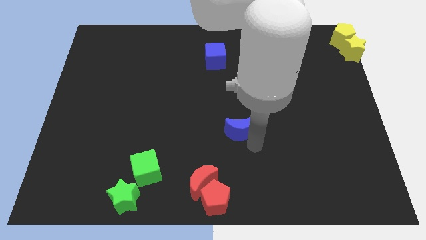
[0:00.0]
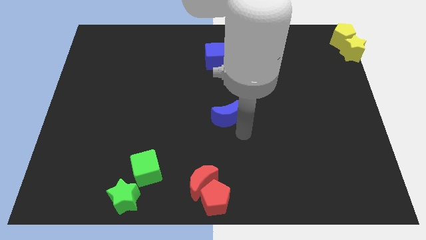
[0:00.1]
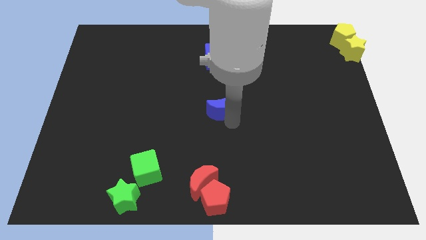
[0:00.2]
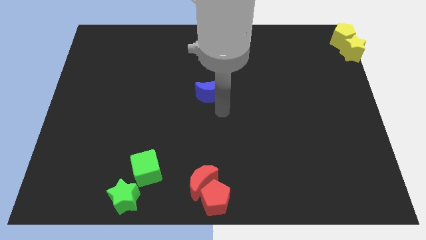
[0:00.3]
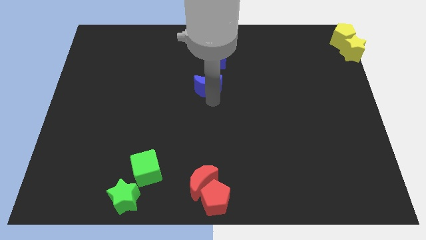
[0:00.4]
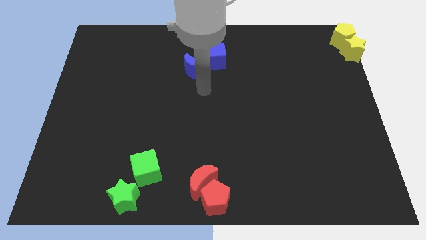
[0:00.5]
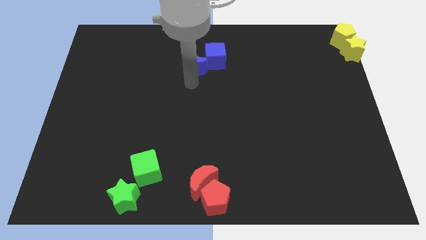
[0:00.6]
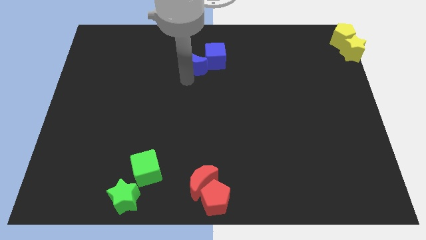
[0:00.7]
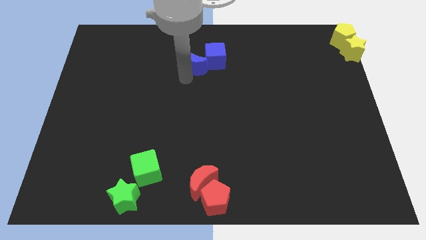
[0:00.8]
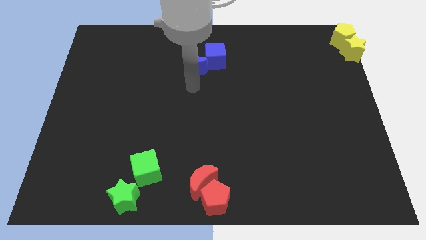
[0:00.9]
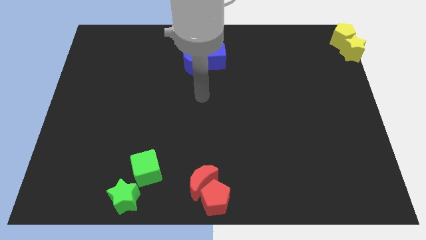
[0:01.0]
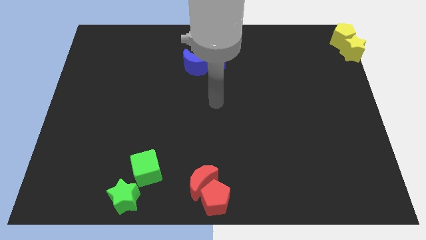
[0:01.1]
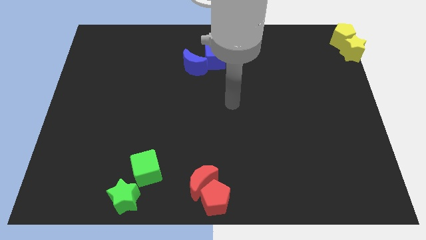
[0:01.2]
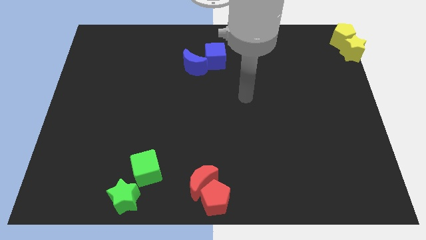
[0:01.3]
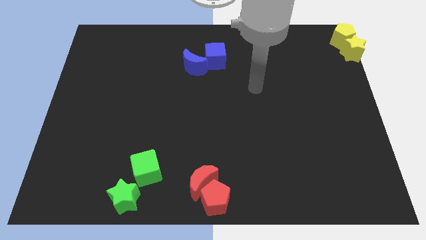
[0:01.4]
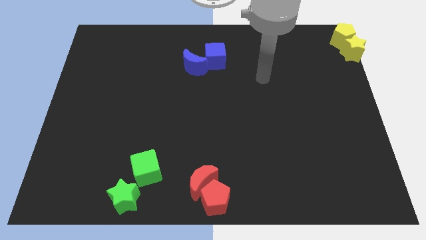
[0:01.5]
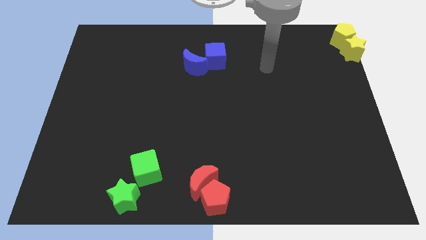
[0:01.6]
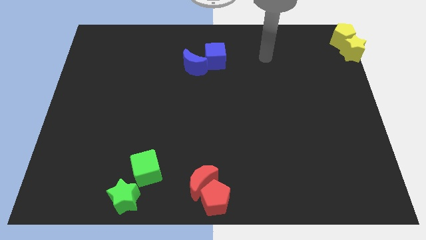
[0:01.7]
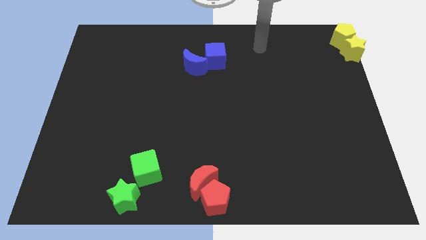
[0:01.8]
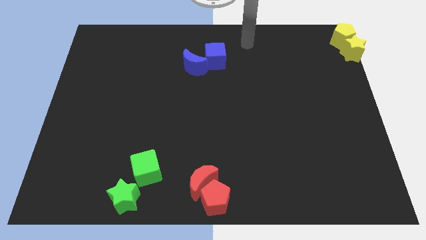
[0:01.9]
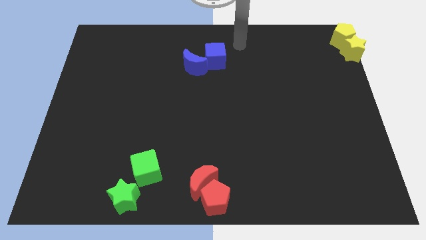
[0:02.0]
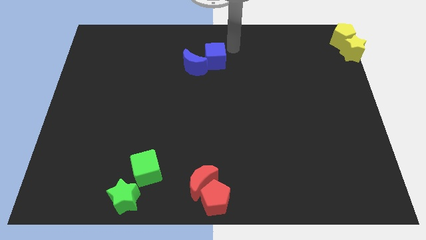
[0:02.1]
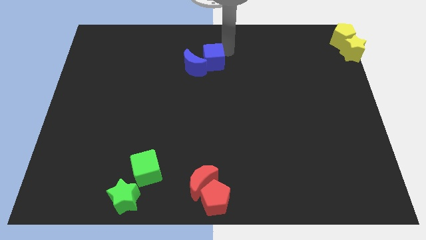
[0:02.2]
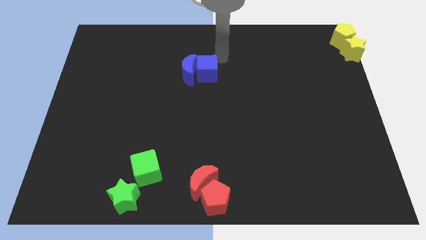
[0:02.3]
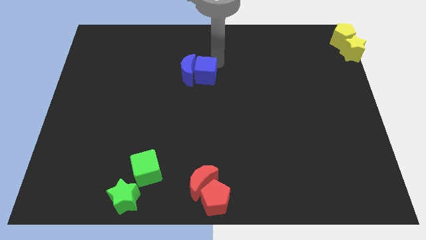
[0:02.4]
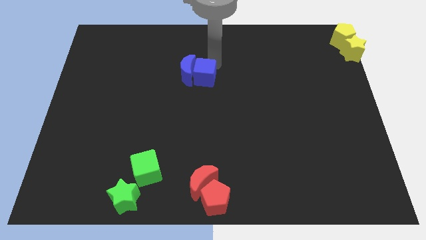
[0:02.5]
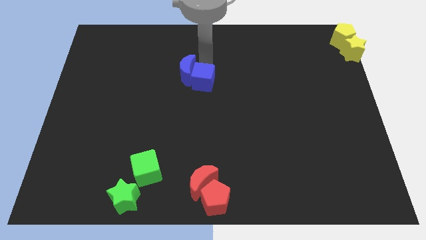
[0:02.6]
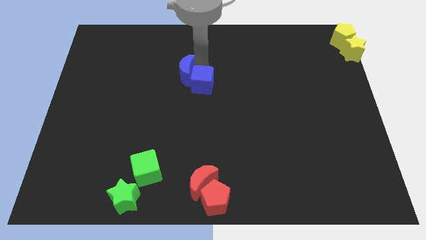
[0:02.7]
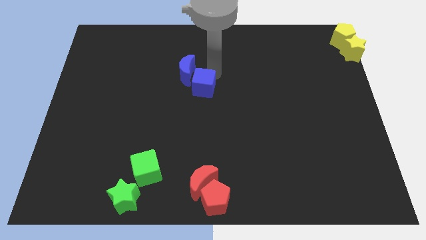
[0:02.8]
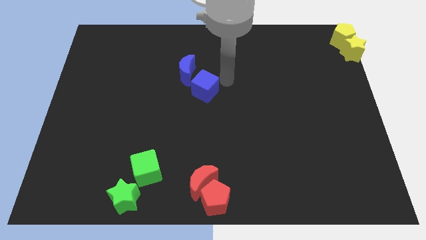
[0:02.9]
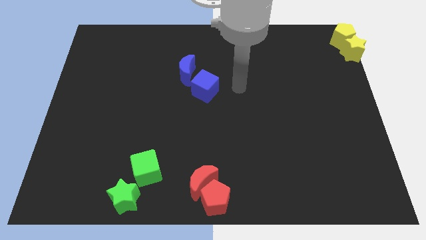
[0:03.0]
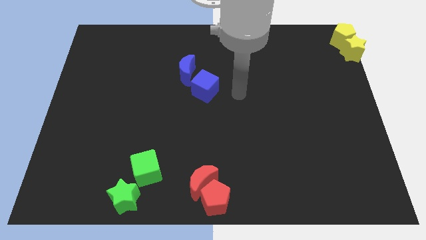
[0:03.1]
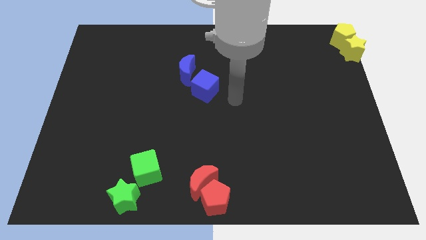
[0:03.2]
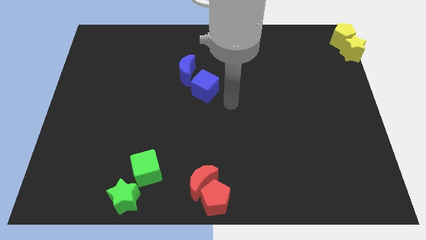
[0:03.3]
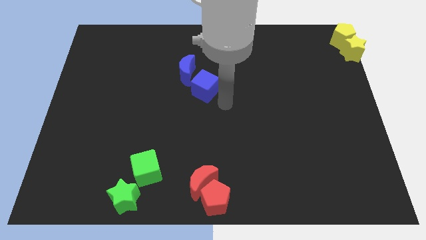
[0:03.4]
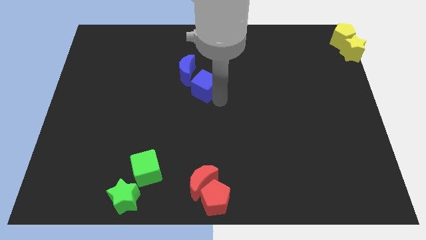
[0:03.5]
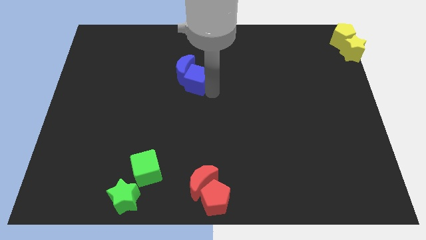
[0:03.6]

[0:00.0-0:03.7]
push the blue cube towards the center

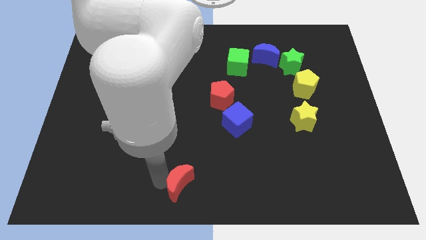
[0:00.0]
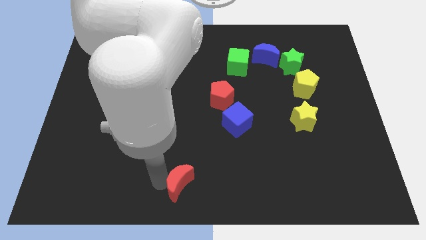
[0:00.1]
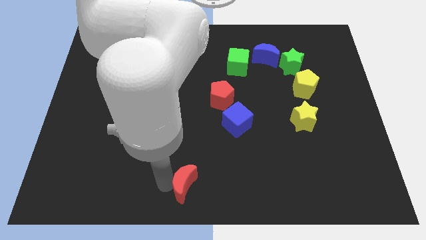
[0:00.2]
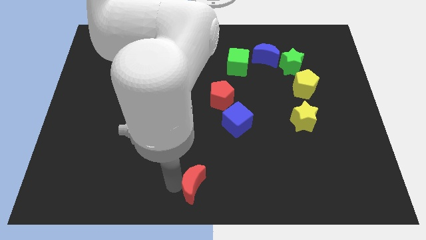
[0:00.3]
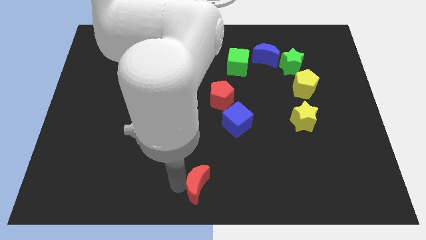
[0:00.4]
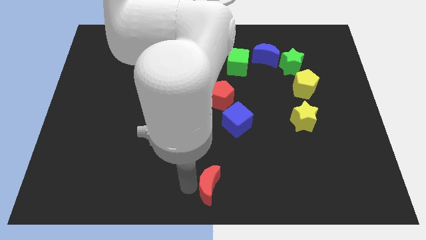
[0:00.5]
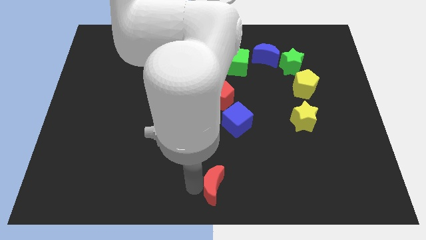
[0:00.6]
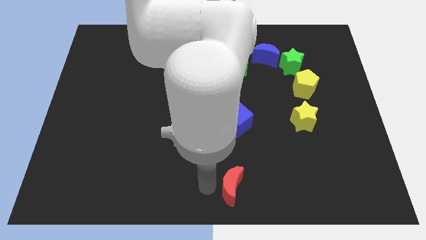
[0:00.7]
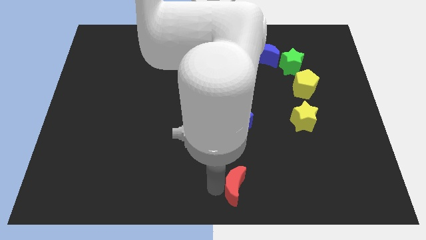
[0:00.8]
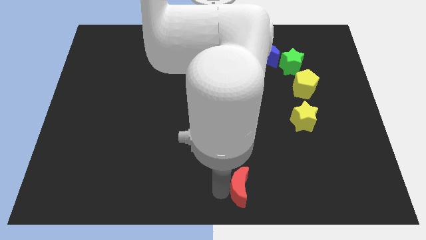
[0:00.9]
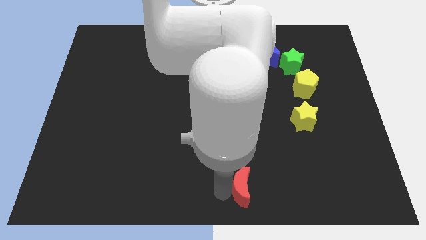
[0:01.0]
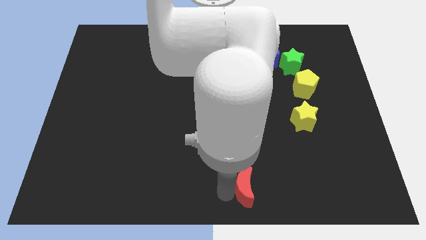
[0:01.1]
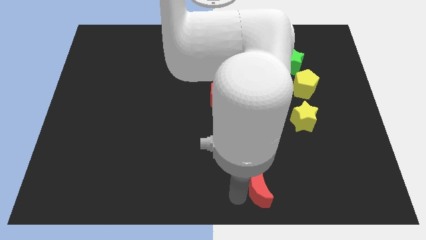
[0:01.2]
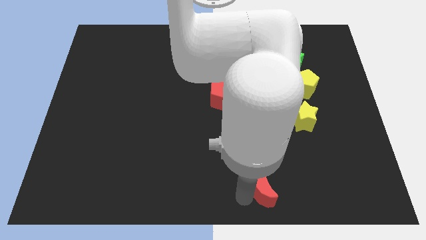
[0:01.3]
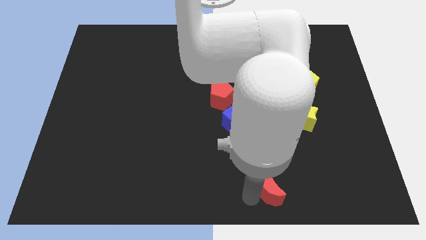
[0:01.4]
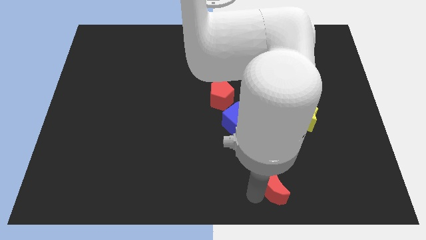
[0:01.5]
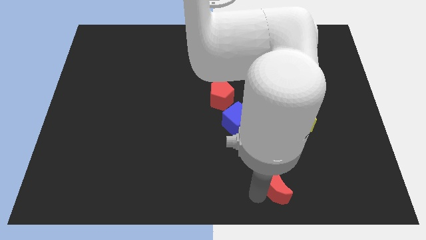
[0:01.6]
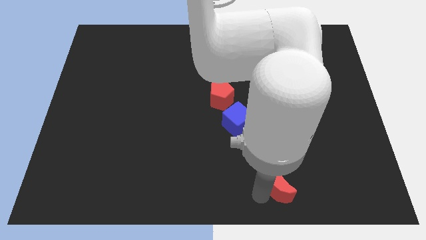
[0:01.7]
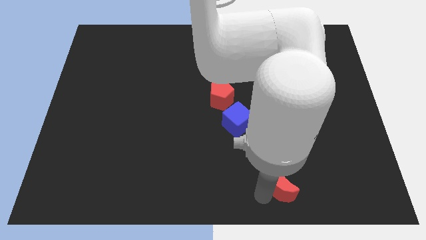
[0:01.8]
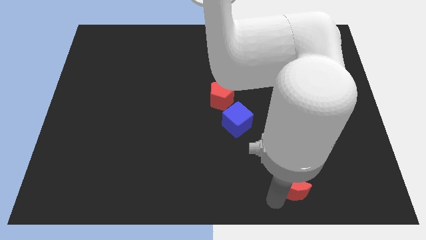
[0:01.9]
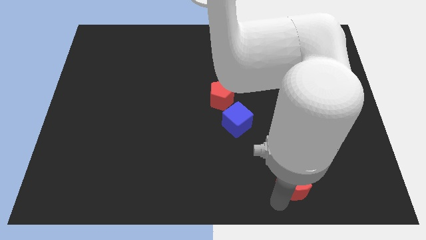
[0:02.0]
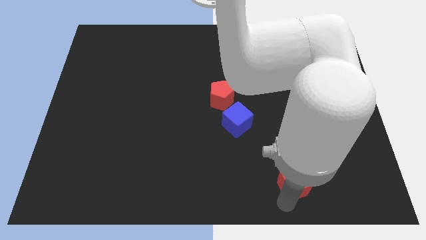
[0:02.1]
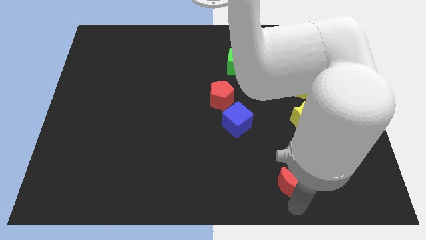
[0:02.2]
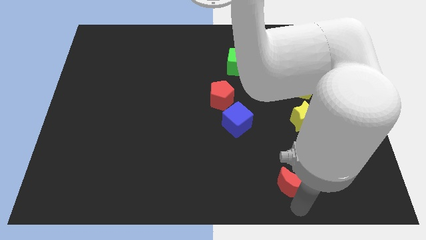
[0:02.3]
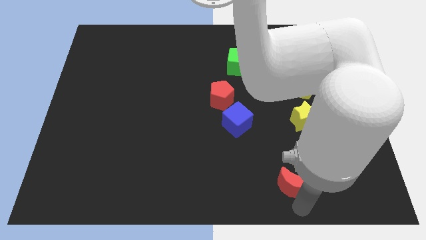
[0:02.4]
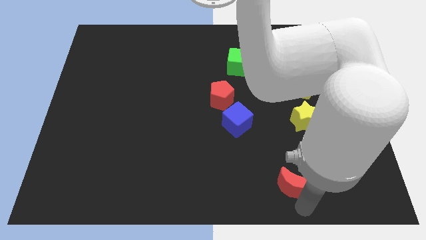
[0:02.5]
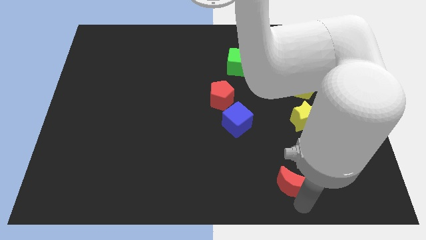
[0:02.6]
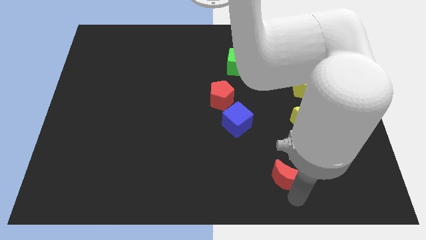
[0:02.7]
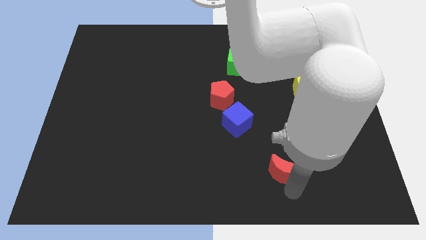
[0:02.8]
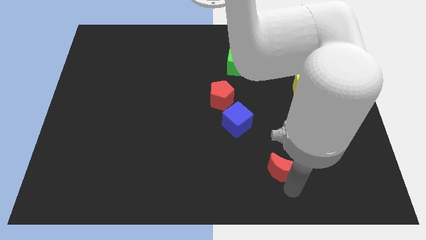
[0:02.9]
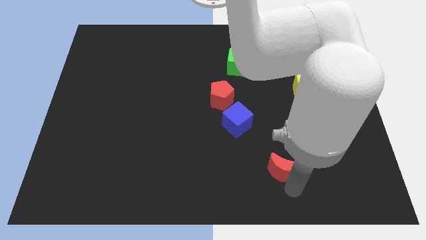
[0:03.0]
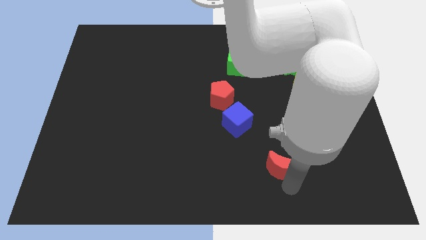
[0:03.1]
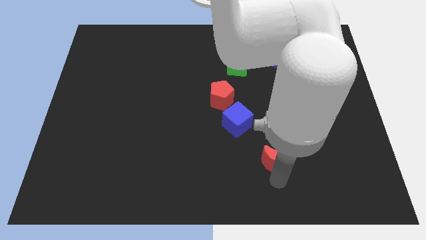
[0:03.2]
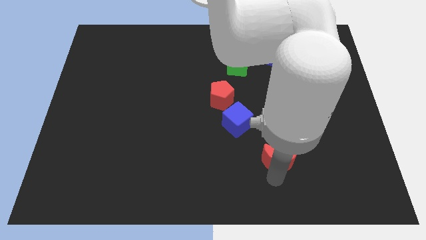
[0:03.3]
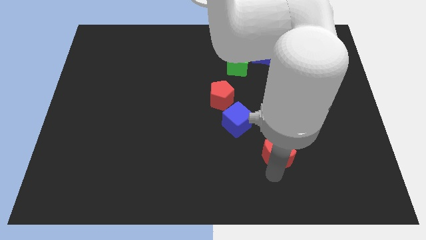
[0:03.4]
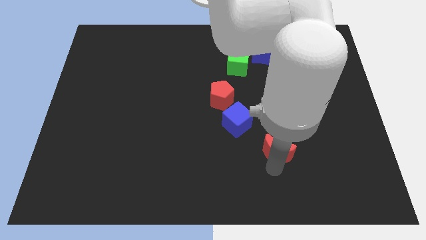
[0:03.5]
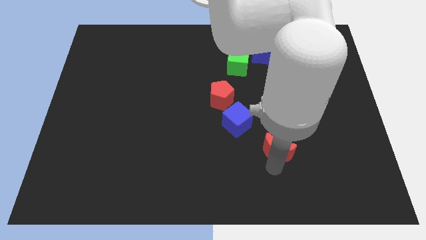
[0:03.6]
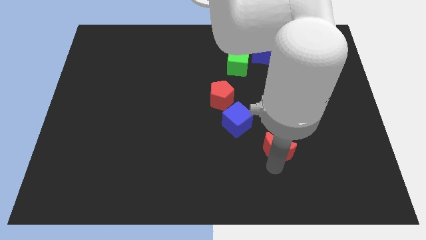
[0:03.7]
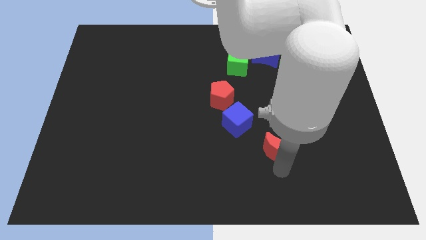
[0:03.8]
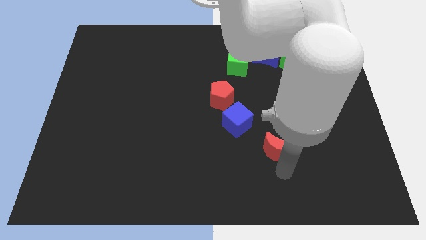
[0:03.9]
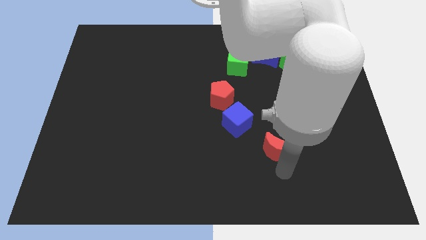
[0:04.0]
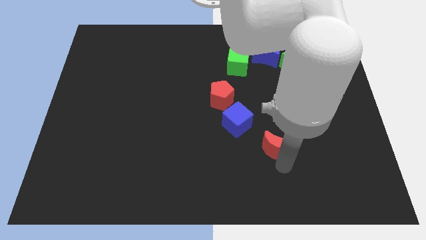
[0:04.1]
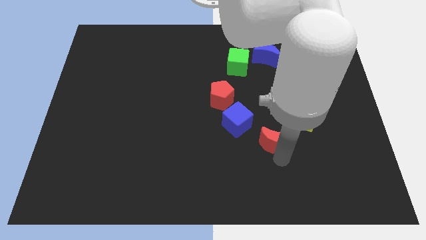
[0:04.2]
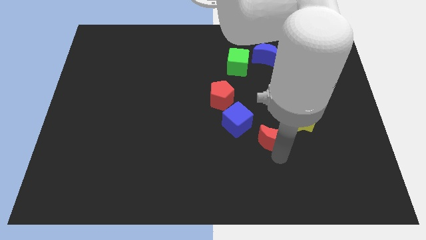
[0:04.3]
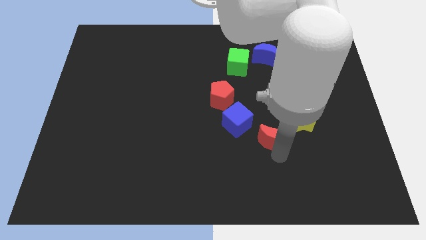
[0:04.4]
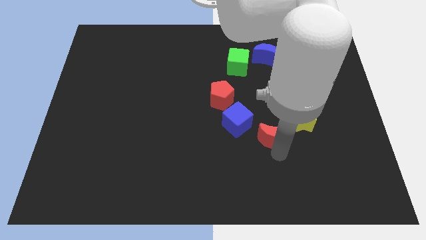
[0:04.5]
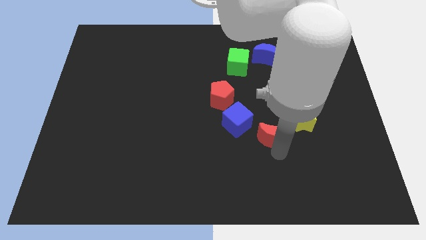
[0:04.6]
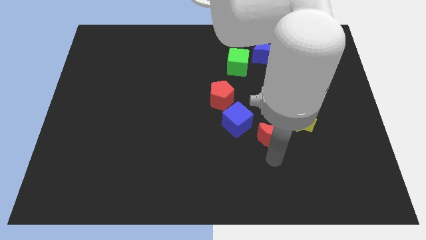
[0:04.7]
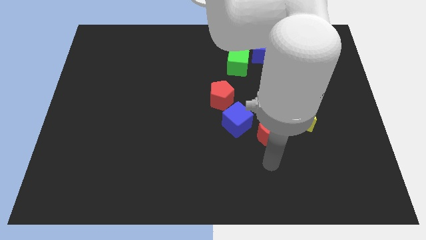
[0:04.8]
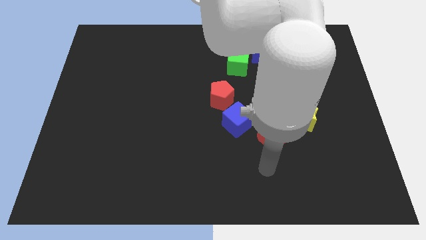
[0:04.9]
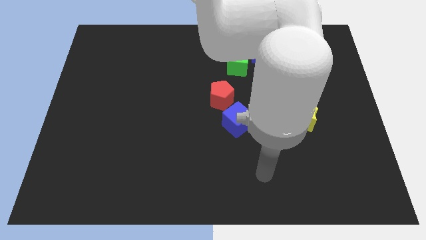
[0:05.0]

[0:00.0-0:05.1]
drag red crescent close to blue cube

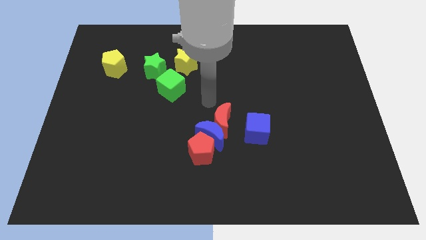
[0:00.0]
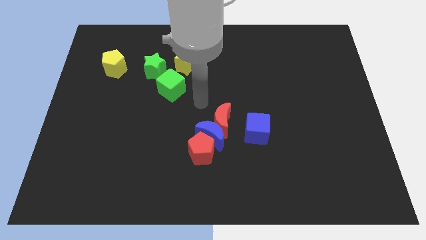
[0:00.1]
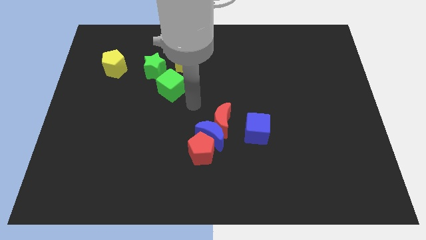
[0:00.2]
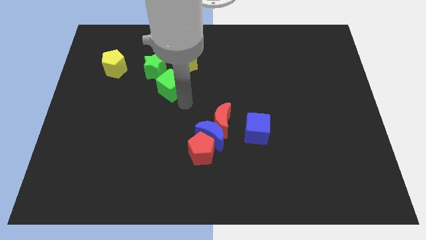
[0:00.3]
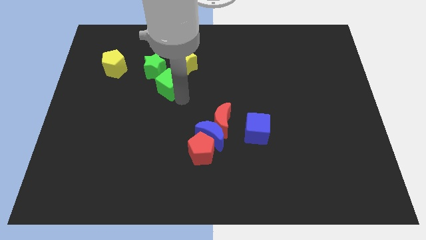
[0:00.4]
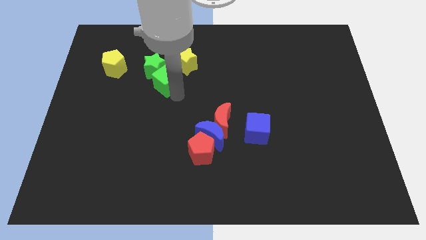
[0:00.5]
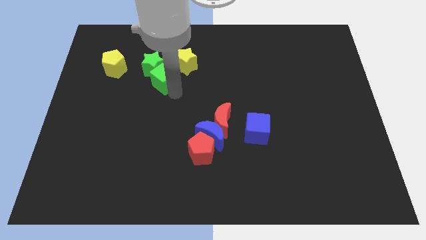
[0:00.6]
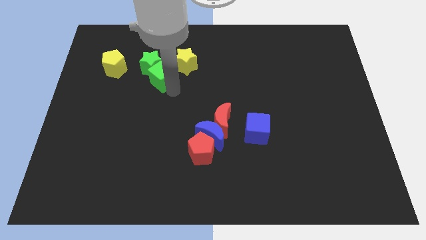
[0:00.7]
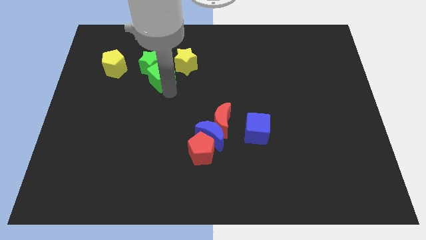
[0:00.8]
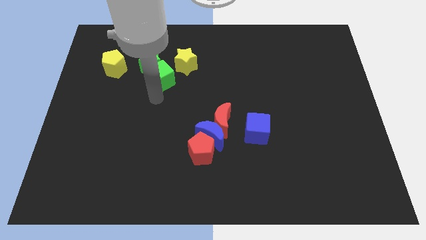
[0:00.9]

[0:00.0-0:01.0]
push the green cube into the green star
